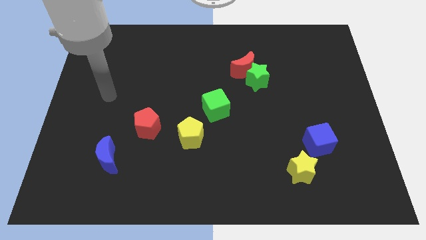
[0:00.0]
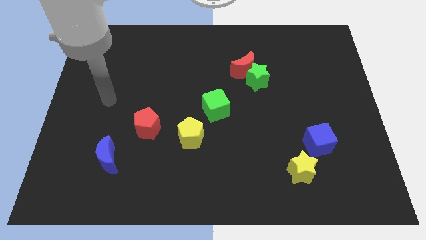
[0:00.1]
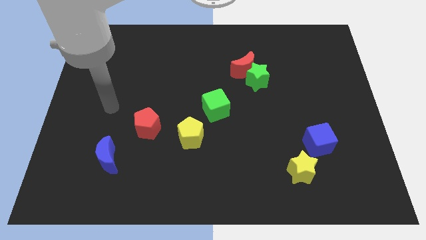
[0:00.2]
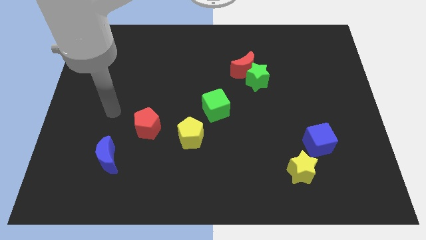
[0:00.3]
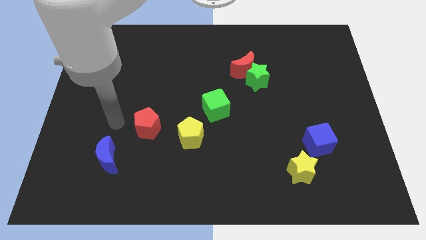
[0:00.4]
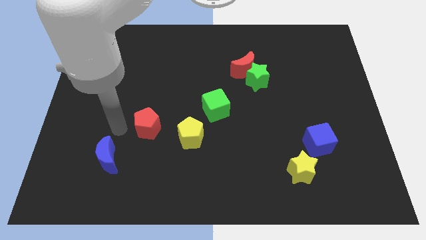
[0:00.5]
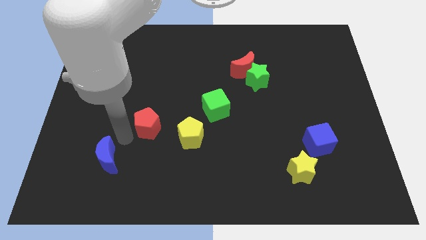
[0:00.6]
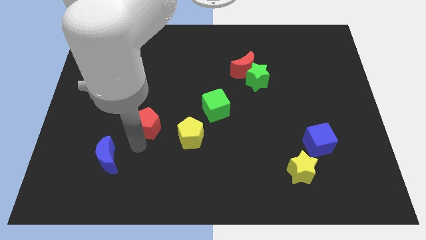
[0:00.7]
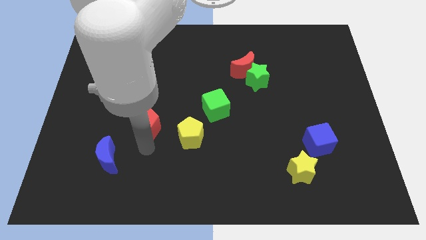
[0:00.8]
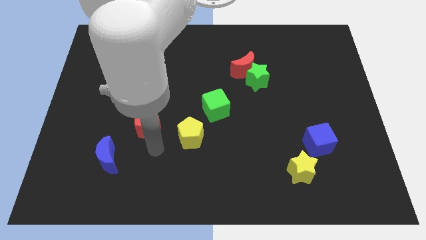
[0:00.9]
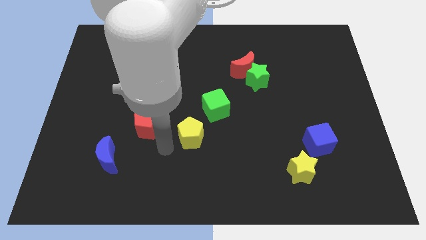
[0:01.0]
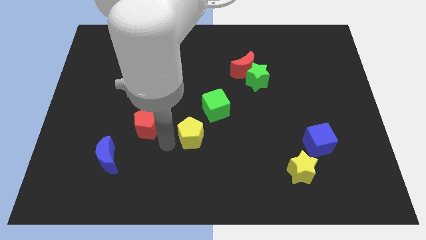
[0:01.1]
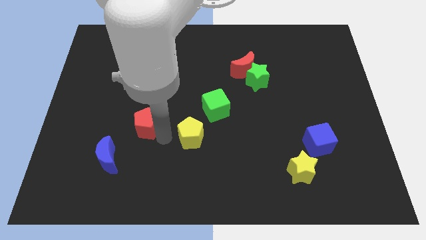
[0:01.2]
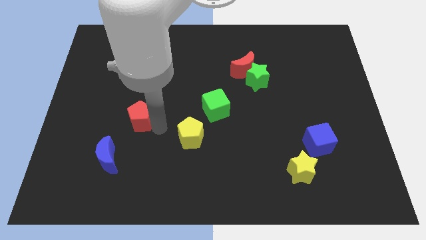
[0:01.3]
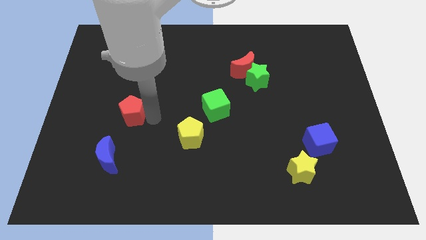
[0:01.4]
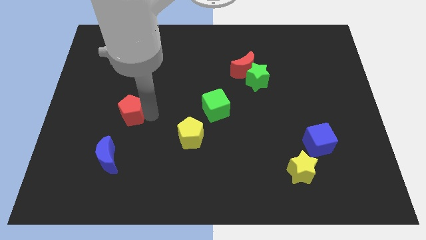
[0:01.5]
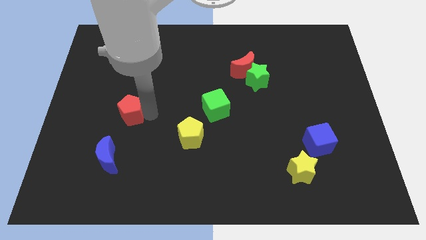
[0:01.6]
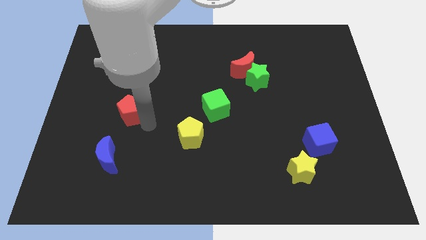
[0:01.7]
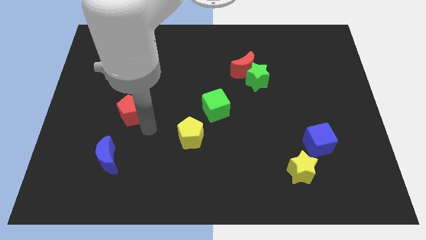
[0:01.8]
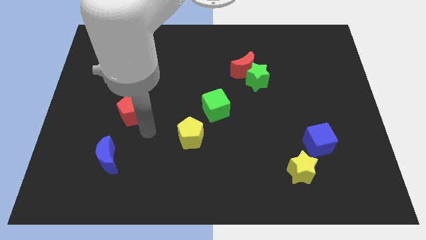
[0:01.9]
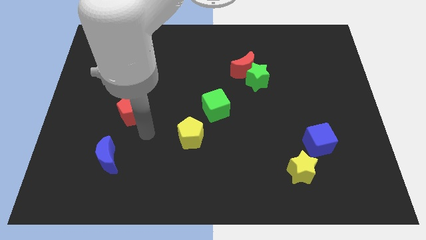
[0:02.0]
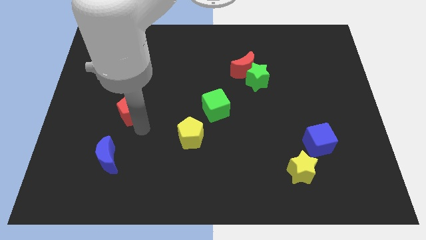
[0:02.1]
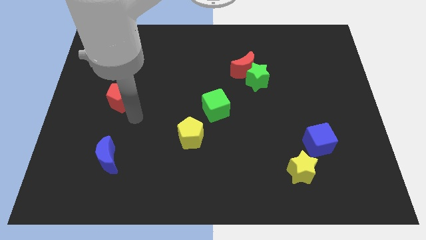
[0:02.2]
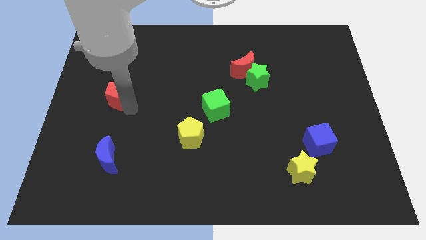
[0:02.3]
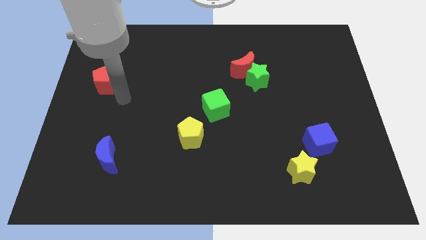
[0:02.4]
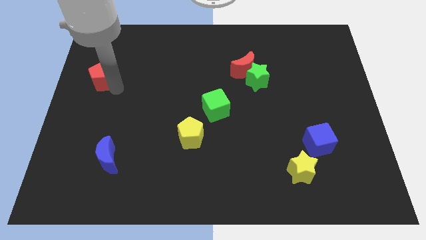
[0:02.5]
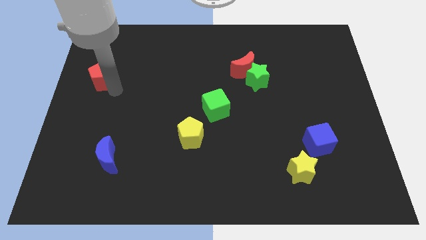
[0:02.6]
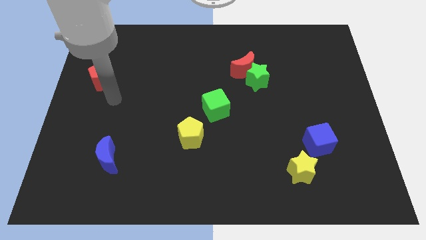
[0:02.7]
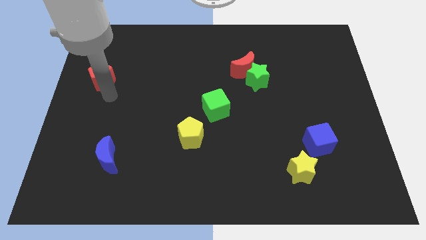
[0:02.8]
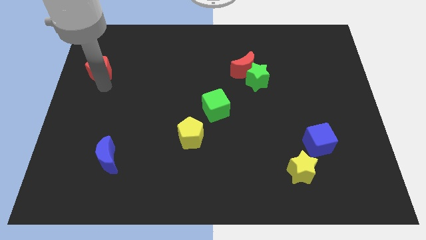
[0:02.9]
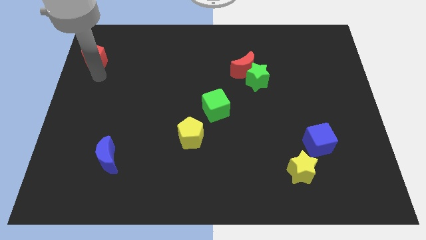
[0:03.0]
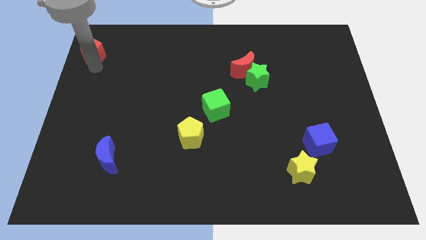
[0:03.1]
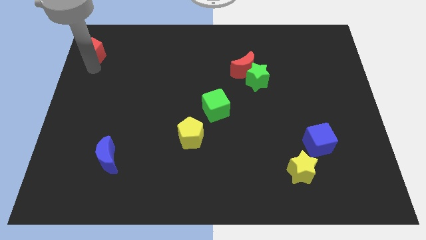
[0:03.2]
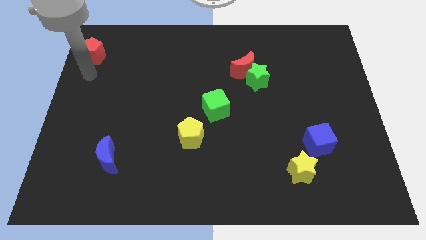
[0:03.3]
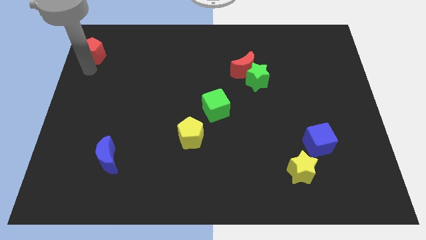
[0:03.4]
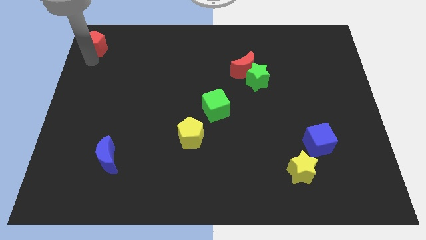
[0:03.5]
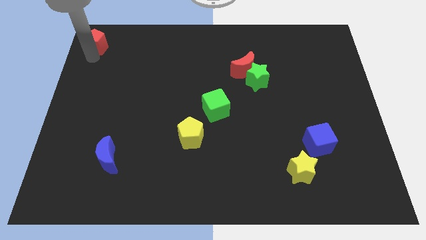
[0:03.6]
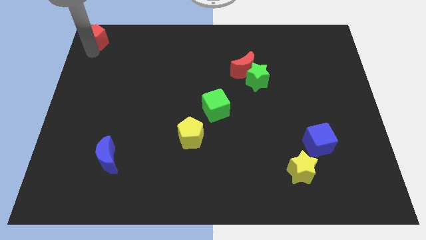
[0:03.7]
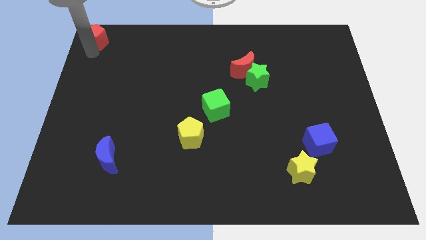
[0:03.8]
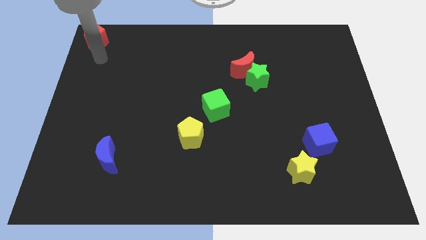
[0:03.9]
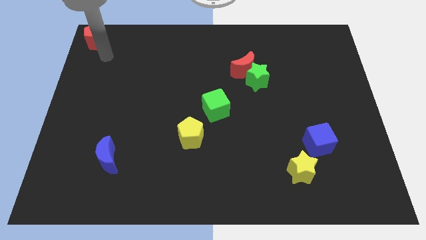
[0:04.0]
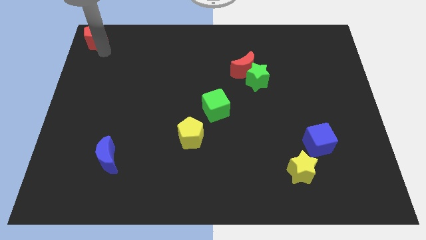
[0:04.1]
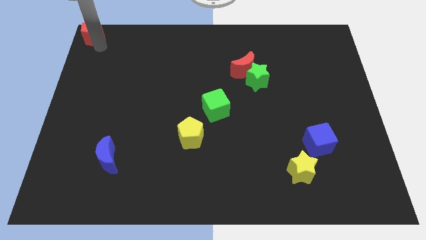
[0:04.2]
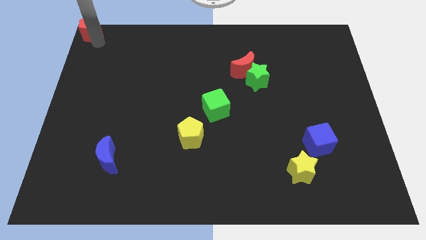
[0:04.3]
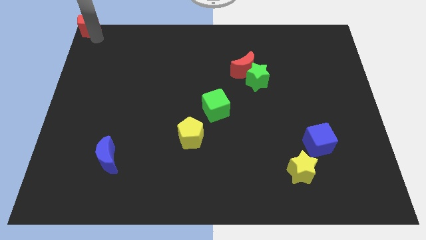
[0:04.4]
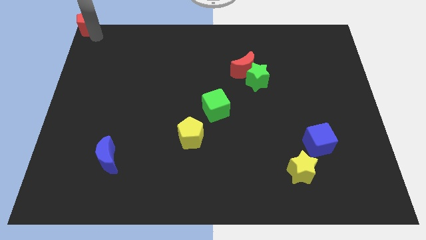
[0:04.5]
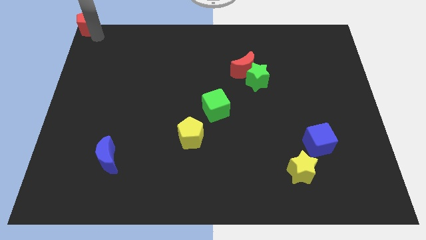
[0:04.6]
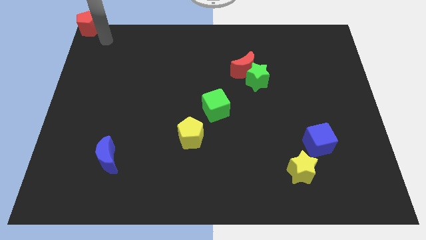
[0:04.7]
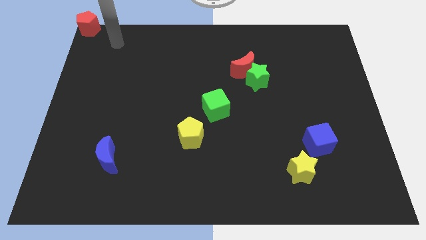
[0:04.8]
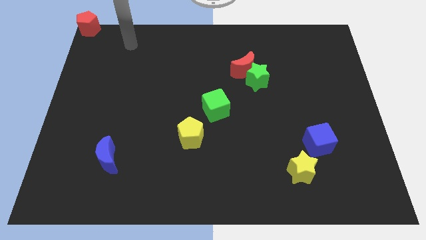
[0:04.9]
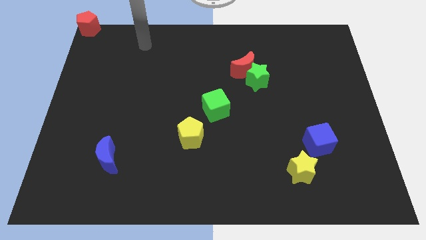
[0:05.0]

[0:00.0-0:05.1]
place the red pentagon towards the left top corner of the board

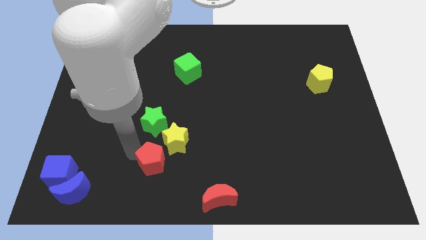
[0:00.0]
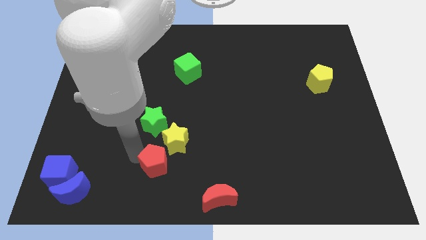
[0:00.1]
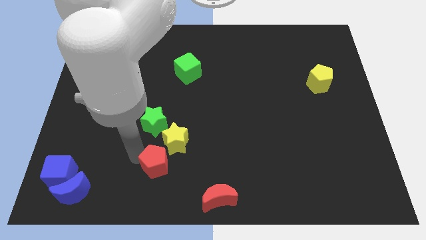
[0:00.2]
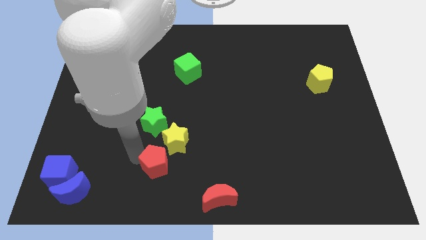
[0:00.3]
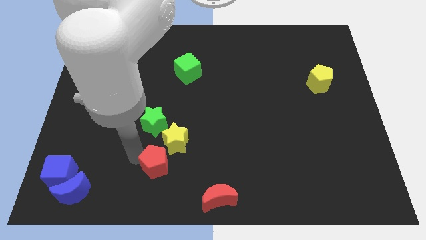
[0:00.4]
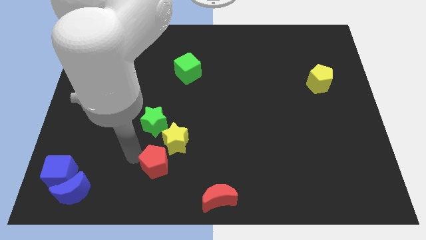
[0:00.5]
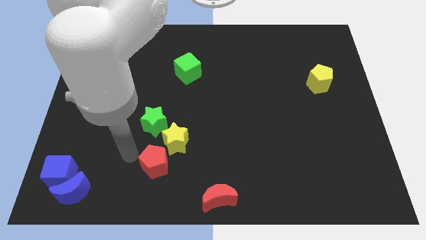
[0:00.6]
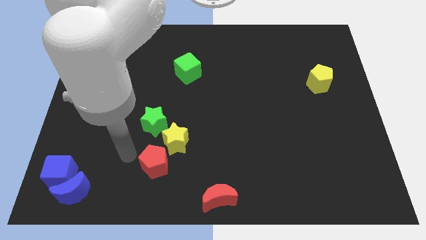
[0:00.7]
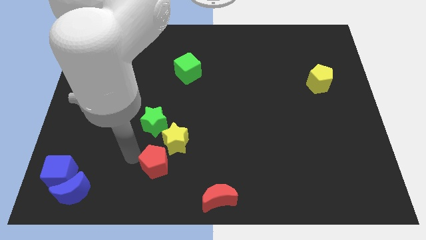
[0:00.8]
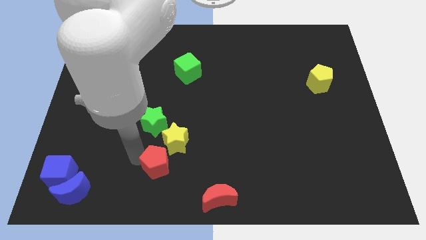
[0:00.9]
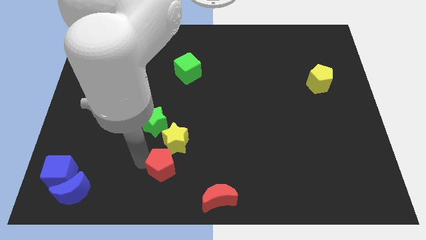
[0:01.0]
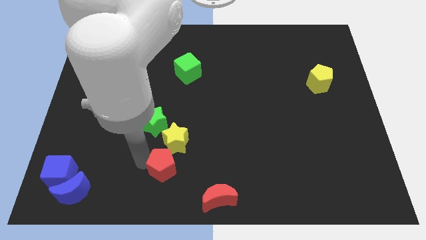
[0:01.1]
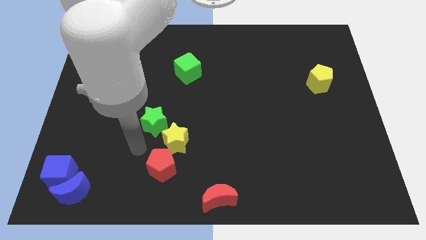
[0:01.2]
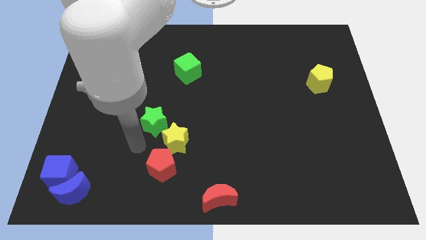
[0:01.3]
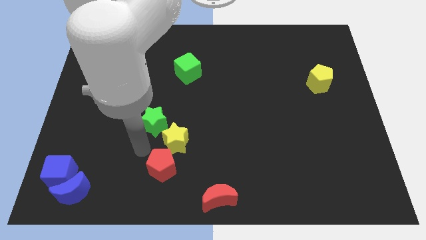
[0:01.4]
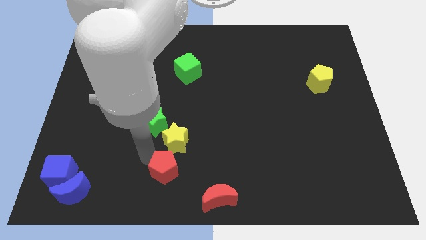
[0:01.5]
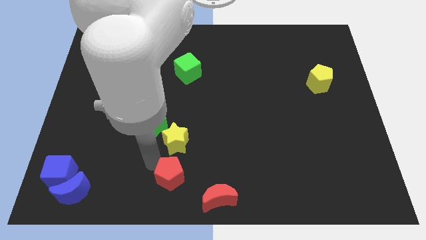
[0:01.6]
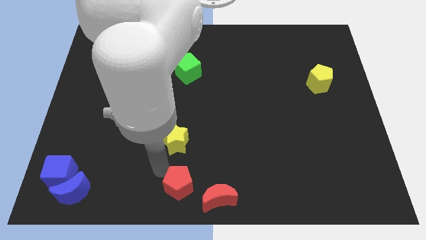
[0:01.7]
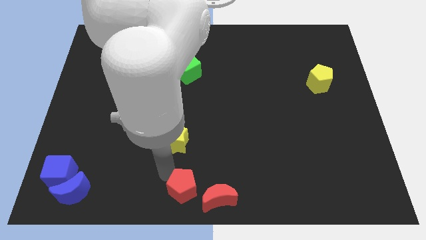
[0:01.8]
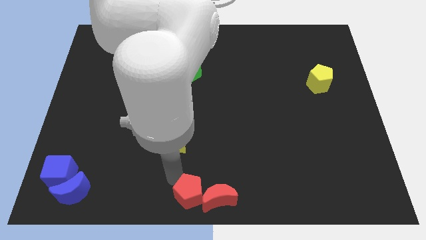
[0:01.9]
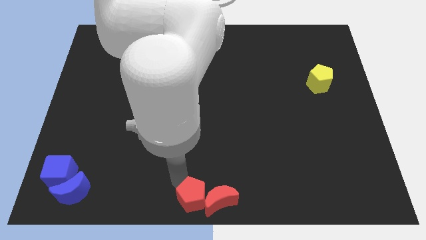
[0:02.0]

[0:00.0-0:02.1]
push the red pentagon towards the bottom center

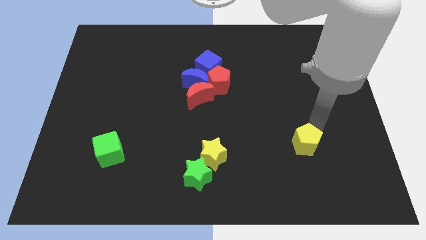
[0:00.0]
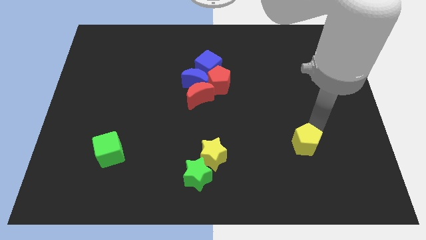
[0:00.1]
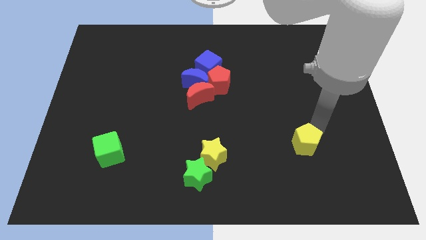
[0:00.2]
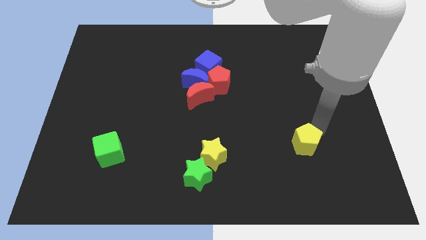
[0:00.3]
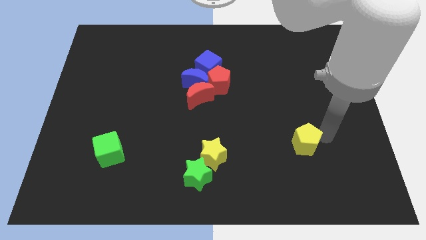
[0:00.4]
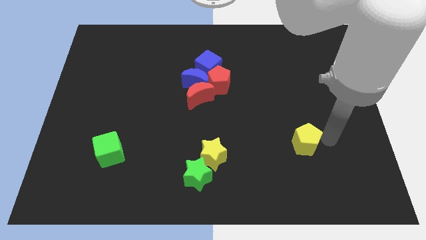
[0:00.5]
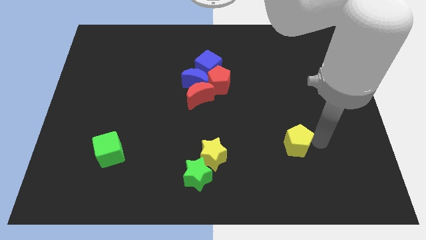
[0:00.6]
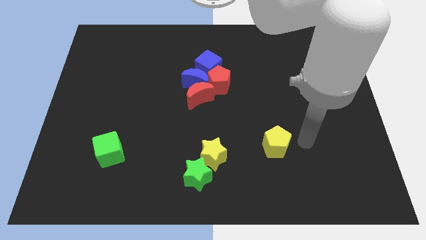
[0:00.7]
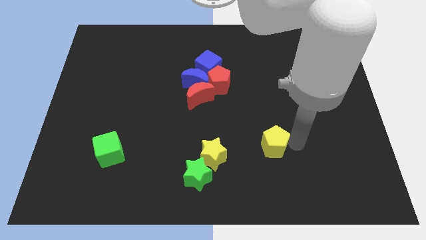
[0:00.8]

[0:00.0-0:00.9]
place the yellow pentagon near the yellow star

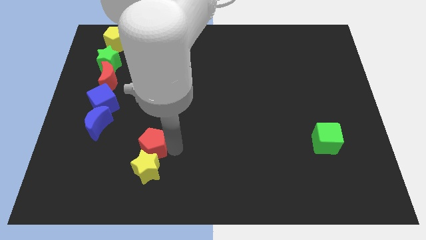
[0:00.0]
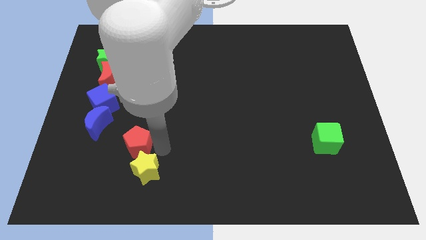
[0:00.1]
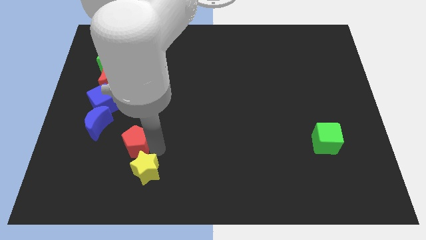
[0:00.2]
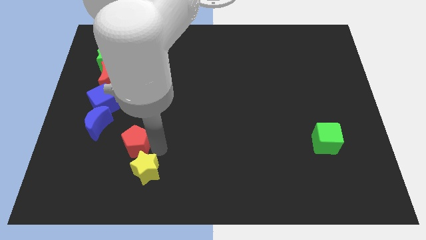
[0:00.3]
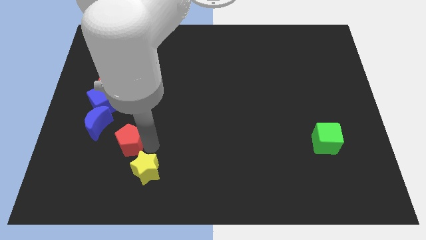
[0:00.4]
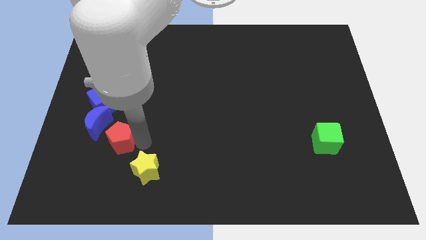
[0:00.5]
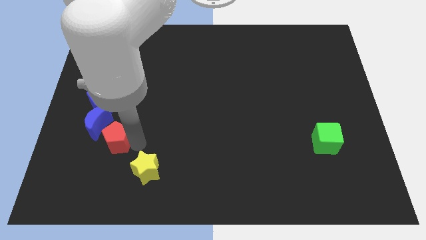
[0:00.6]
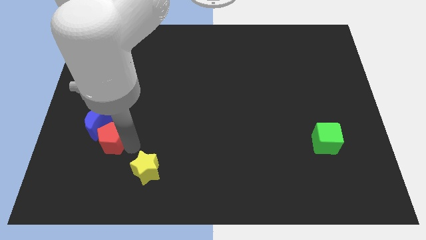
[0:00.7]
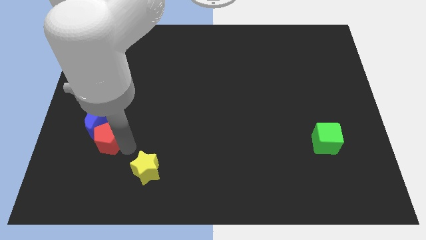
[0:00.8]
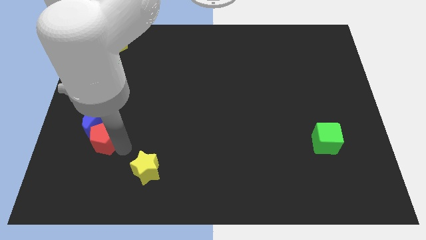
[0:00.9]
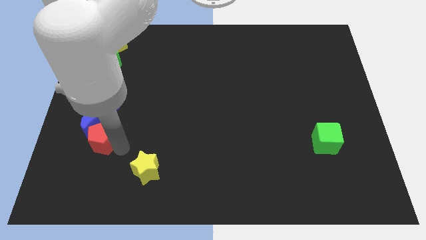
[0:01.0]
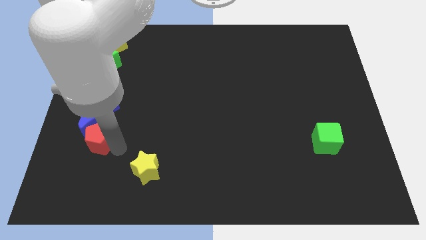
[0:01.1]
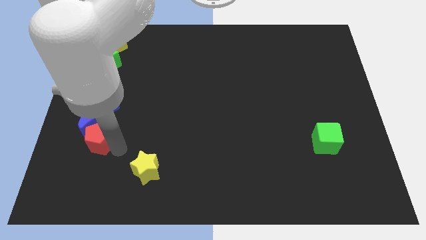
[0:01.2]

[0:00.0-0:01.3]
move the red pentagon into the blue moon
